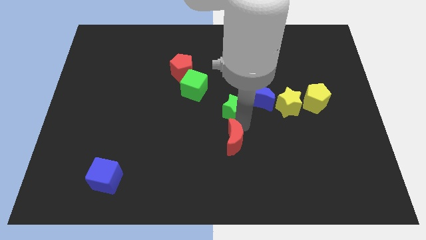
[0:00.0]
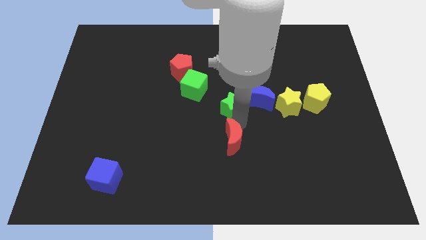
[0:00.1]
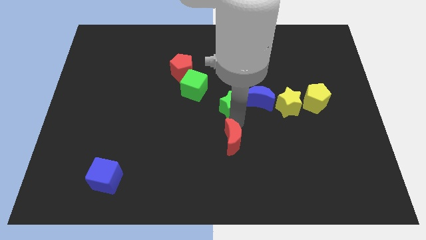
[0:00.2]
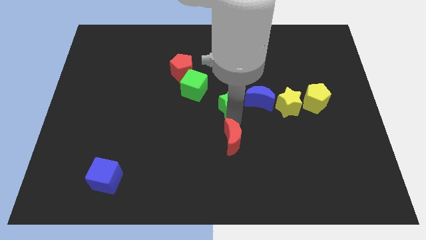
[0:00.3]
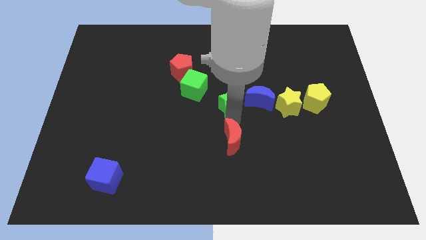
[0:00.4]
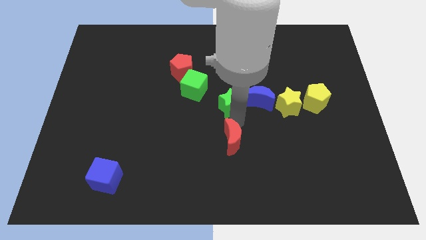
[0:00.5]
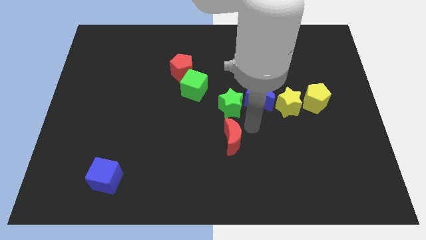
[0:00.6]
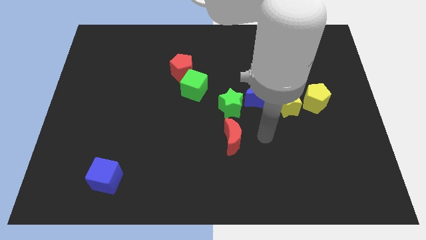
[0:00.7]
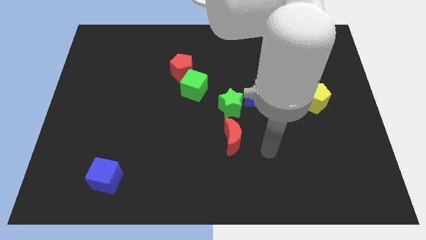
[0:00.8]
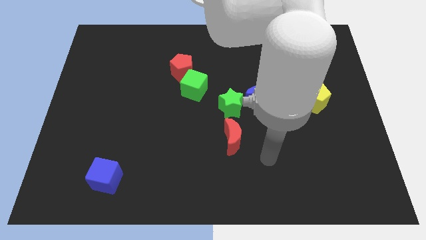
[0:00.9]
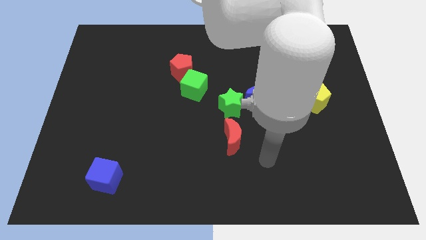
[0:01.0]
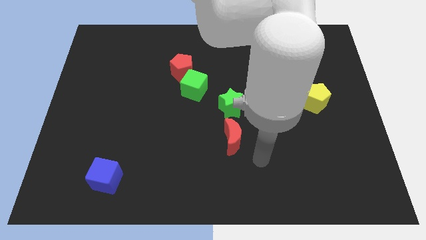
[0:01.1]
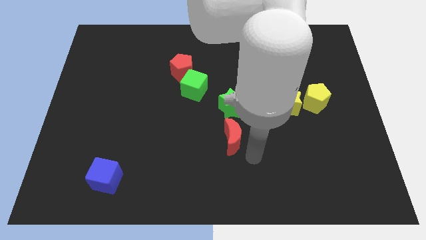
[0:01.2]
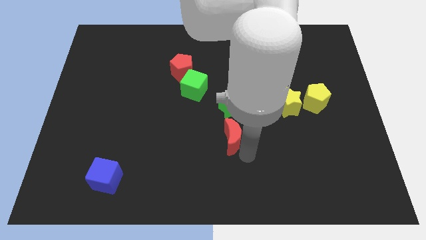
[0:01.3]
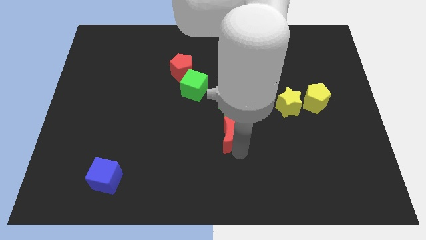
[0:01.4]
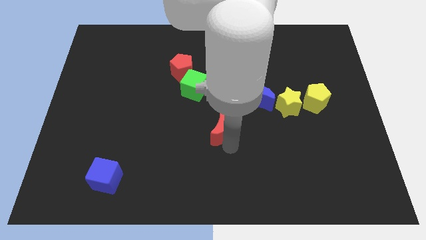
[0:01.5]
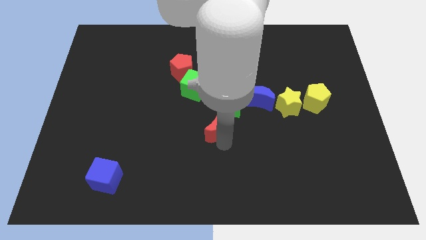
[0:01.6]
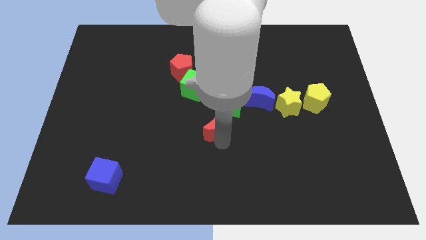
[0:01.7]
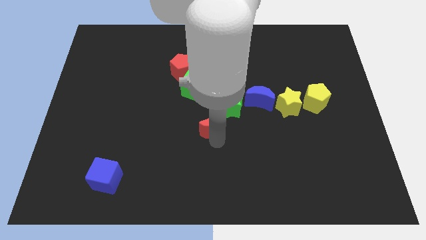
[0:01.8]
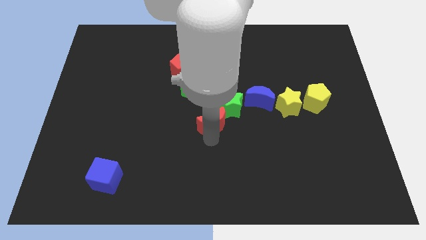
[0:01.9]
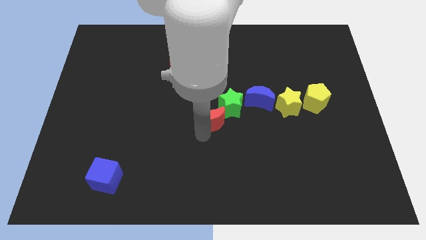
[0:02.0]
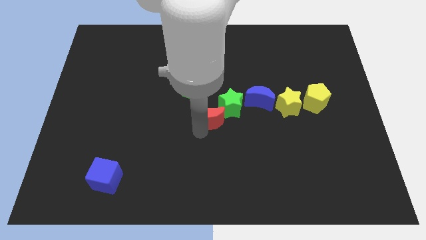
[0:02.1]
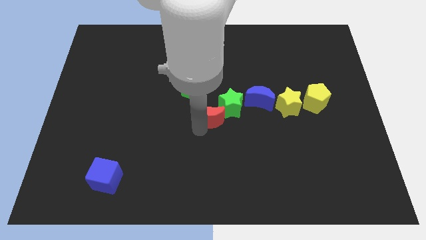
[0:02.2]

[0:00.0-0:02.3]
push red crescent below green cube

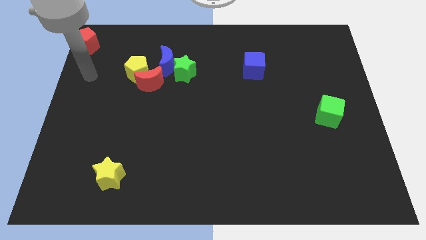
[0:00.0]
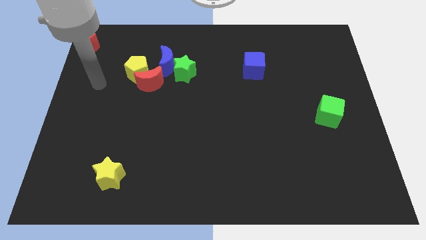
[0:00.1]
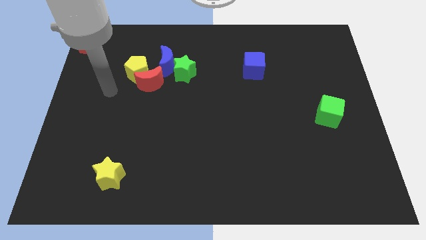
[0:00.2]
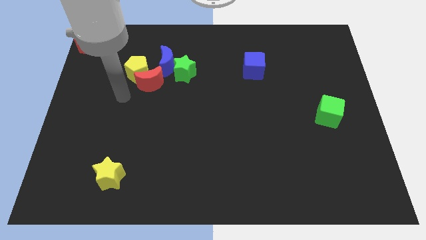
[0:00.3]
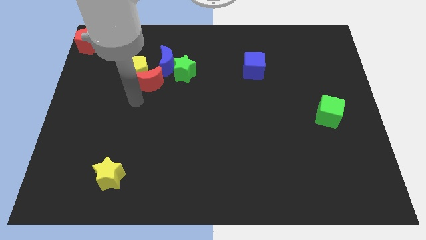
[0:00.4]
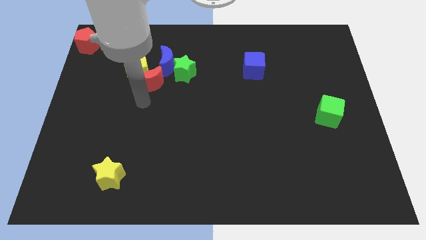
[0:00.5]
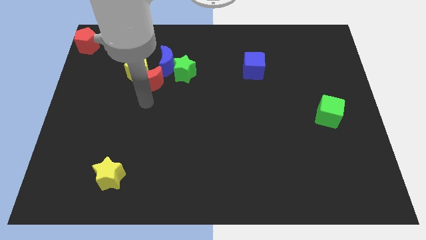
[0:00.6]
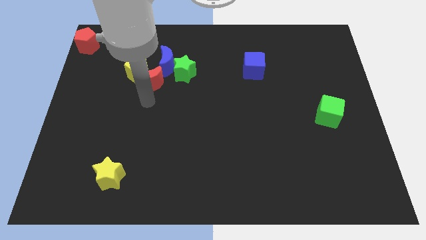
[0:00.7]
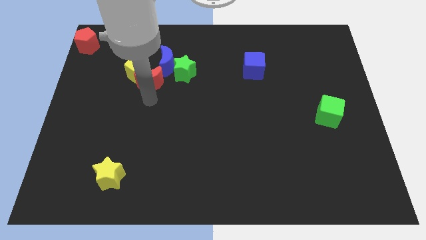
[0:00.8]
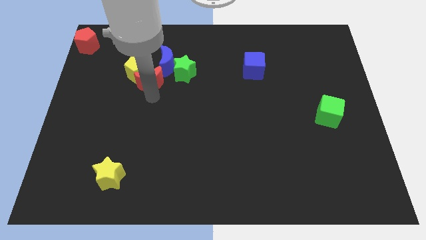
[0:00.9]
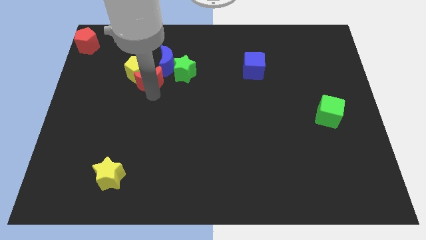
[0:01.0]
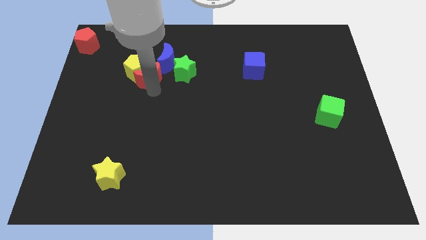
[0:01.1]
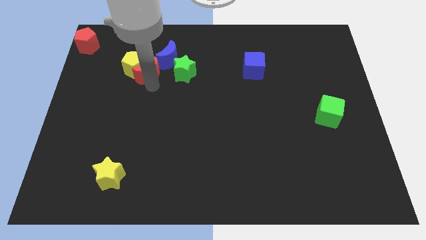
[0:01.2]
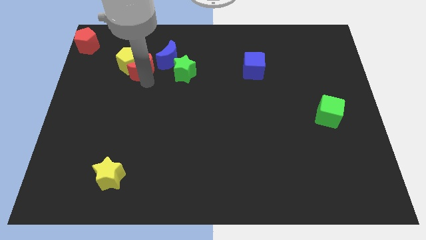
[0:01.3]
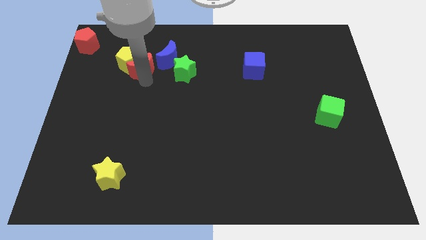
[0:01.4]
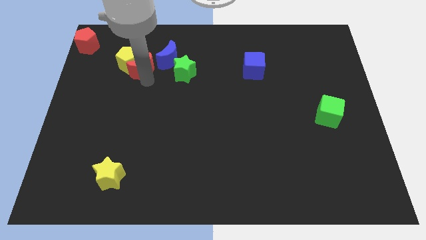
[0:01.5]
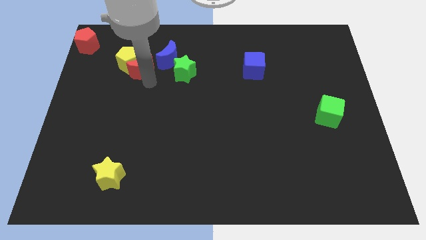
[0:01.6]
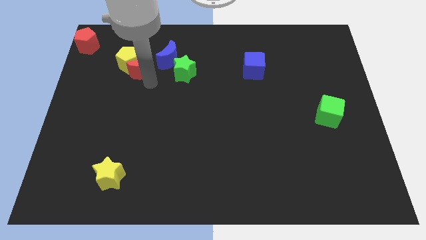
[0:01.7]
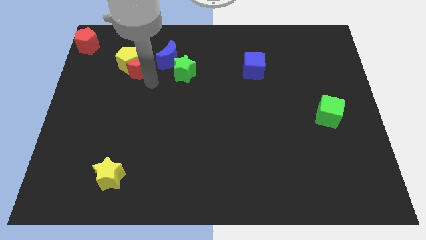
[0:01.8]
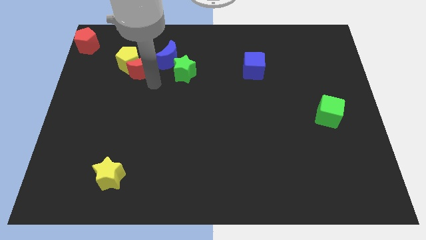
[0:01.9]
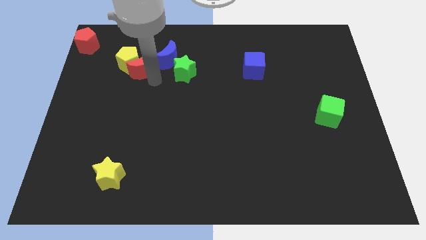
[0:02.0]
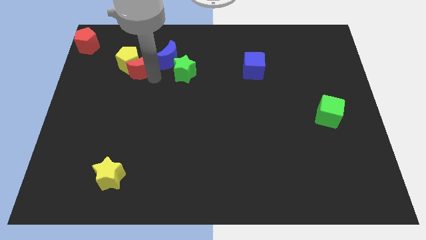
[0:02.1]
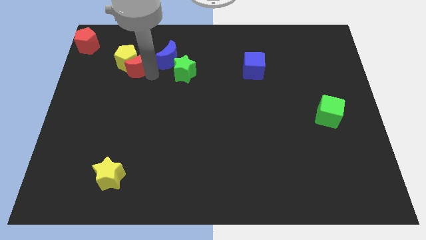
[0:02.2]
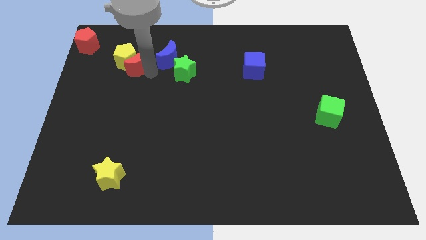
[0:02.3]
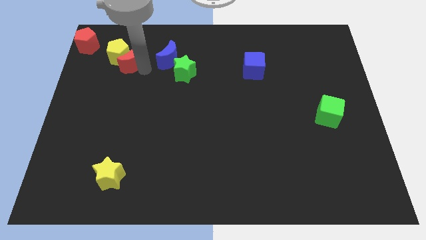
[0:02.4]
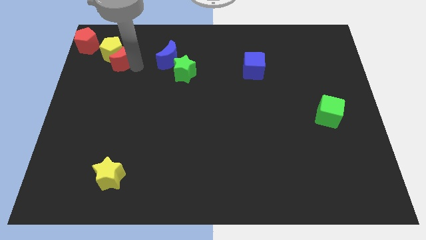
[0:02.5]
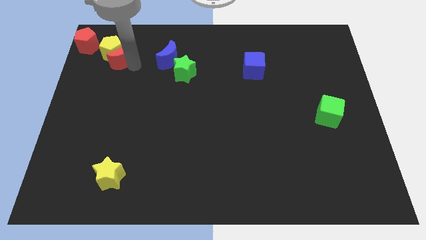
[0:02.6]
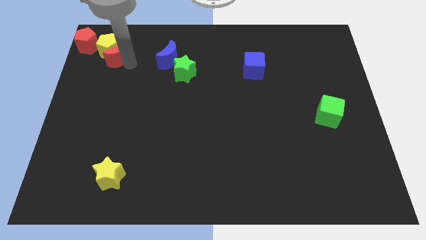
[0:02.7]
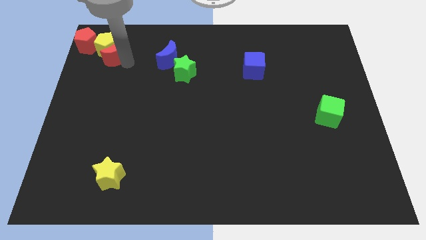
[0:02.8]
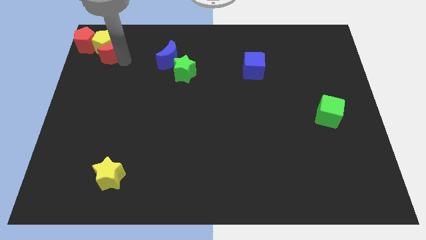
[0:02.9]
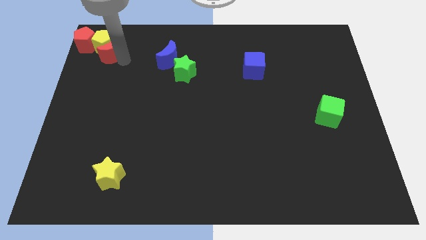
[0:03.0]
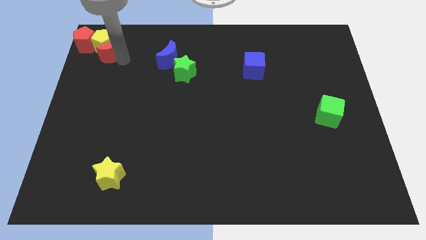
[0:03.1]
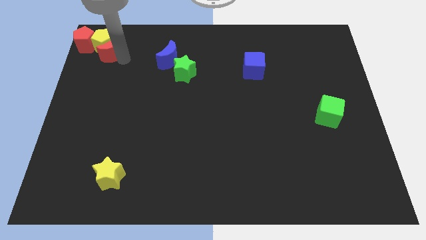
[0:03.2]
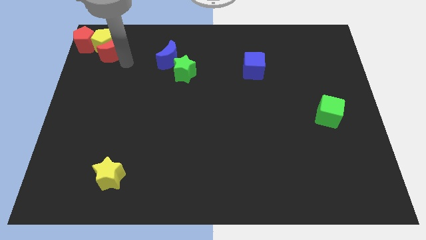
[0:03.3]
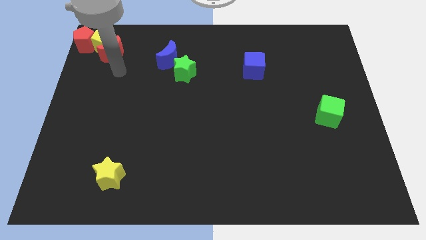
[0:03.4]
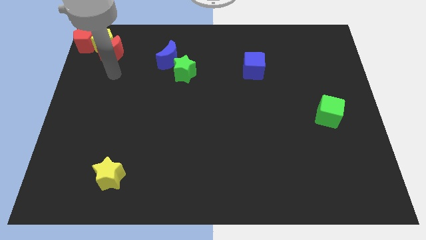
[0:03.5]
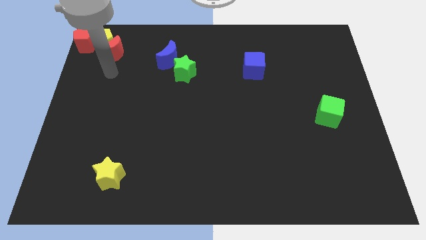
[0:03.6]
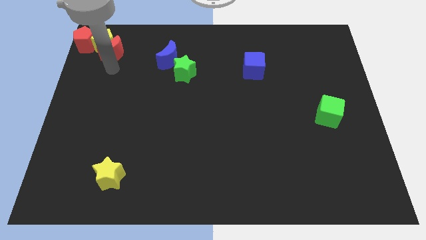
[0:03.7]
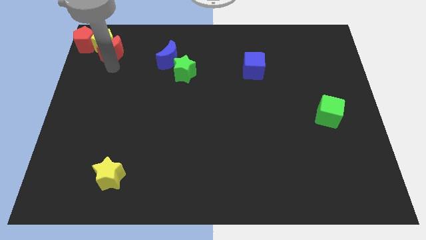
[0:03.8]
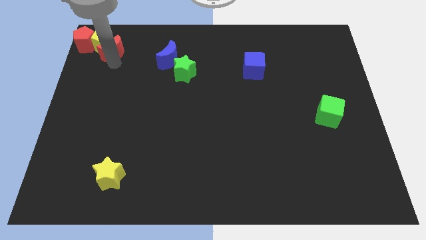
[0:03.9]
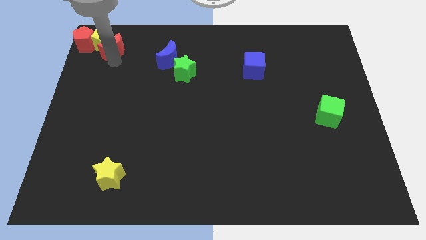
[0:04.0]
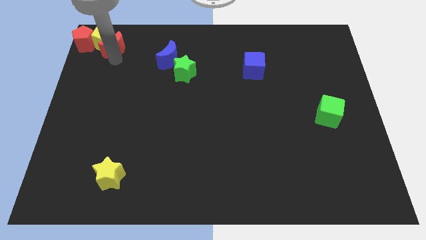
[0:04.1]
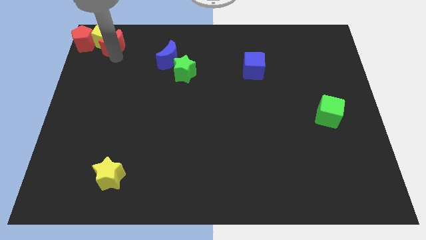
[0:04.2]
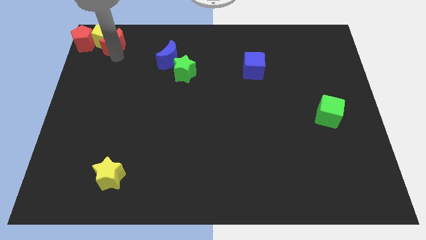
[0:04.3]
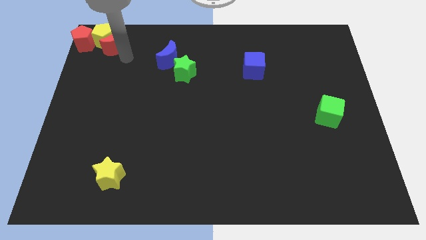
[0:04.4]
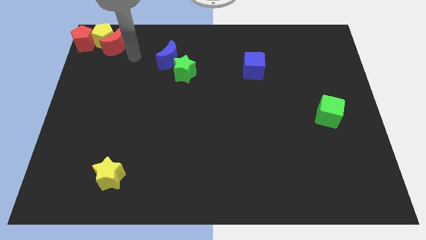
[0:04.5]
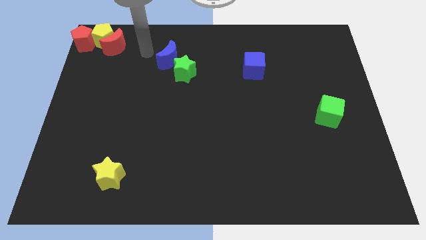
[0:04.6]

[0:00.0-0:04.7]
push yellow pentagon with the red moon to the top left corner of the board

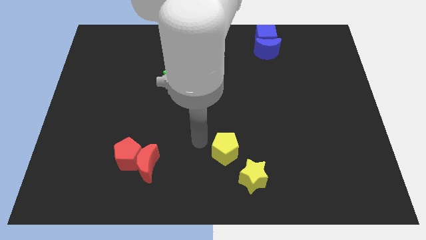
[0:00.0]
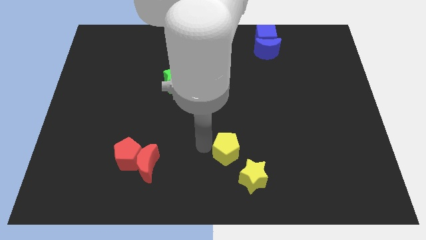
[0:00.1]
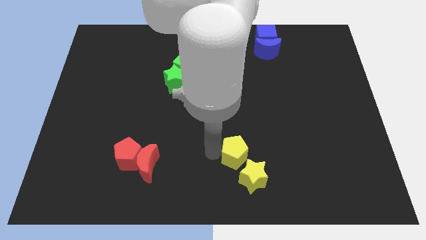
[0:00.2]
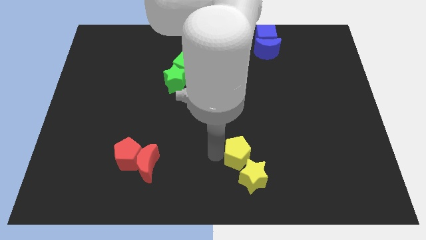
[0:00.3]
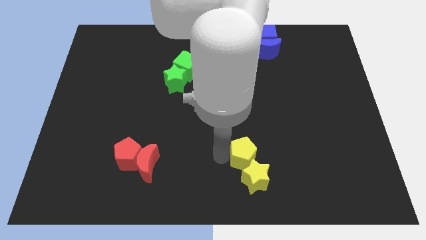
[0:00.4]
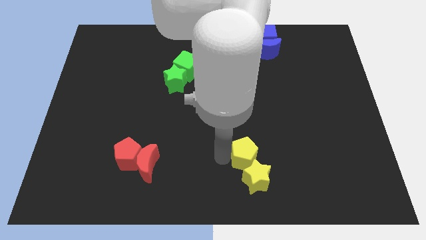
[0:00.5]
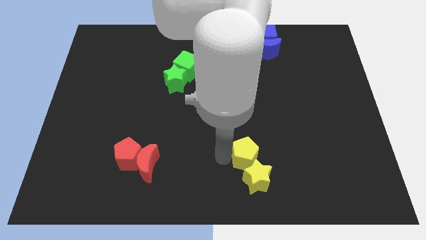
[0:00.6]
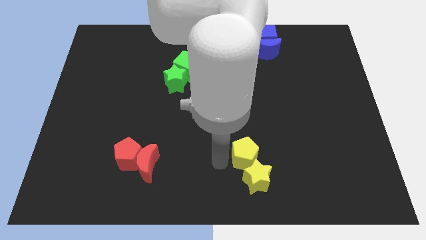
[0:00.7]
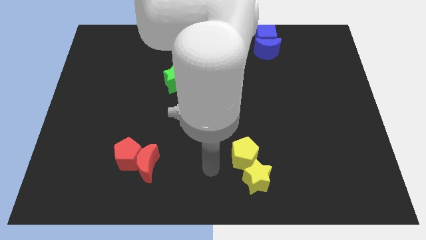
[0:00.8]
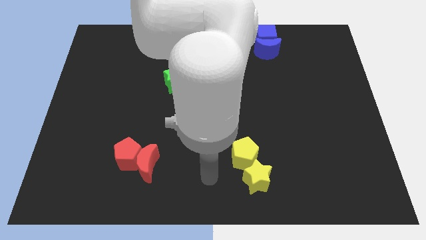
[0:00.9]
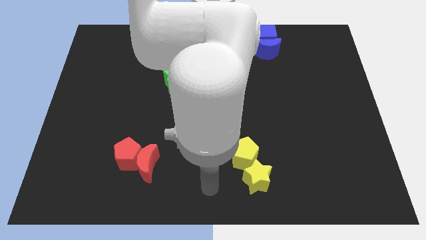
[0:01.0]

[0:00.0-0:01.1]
move the yellow star with the yellow pentagon

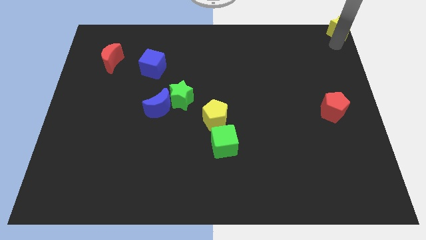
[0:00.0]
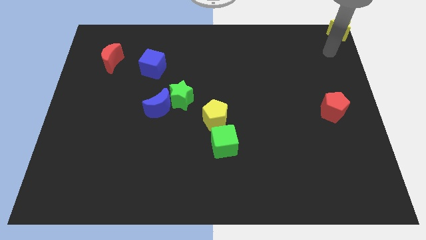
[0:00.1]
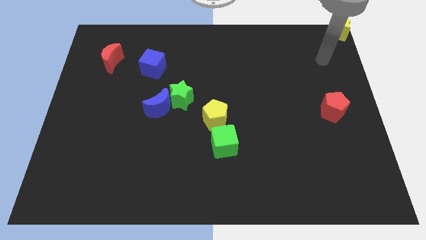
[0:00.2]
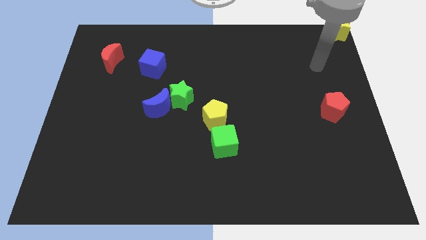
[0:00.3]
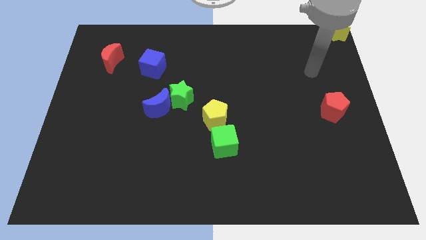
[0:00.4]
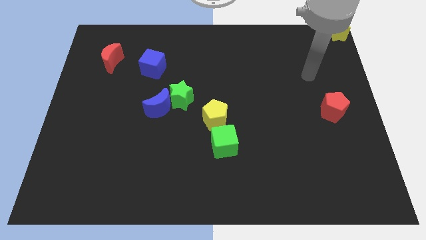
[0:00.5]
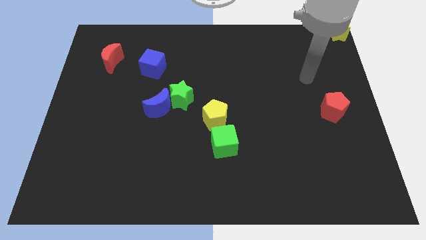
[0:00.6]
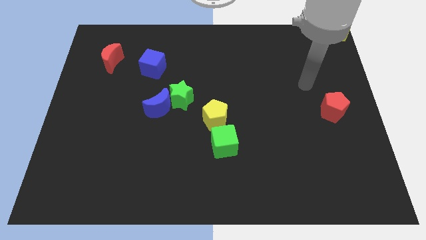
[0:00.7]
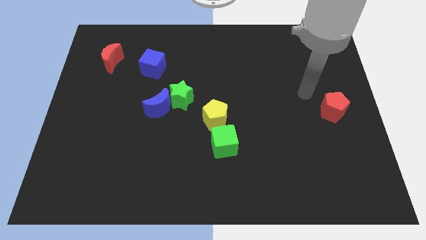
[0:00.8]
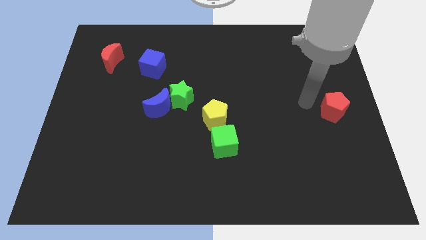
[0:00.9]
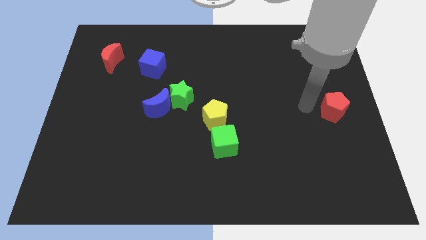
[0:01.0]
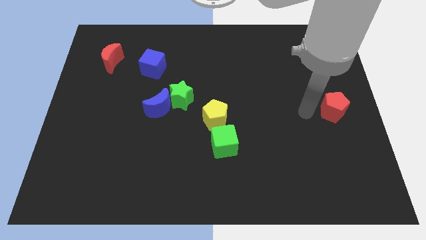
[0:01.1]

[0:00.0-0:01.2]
point your arm at the left of the red pentagon
